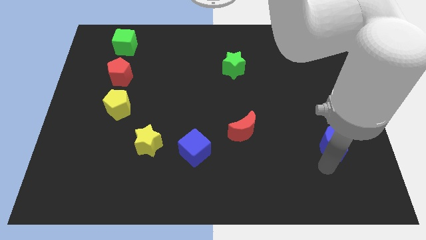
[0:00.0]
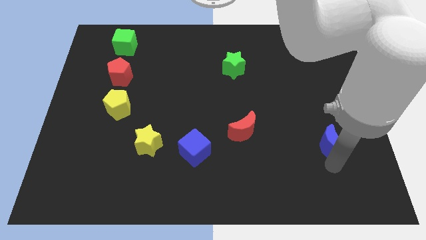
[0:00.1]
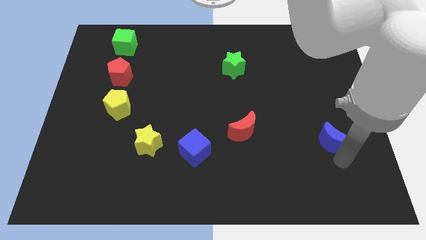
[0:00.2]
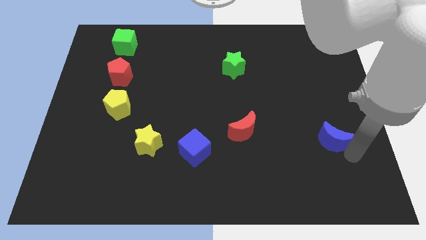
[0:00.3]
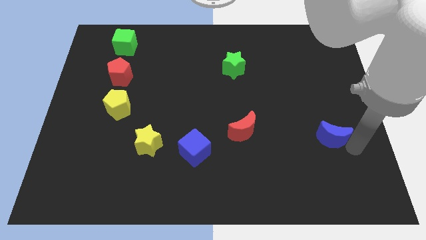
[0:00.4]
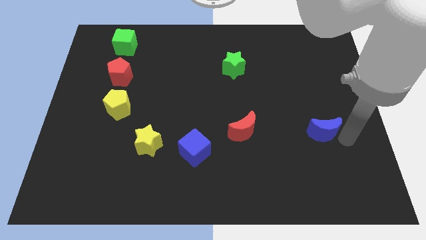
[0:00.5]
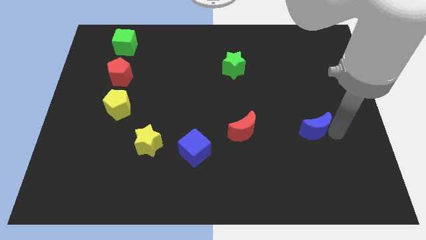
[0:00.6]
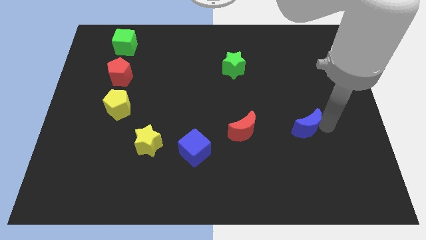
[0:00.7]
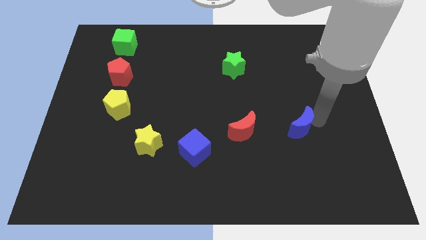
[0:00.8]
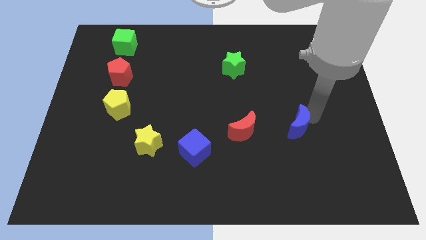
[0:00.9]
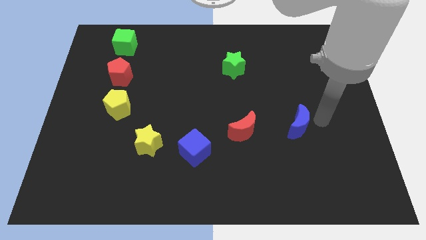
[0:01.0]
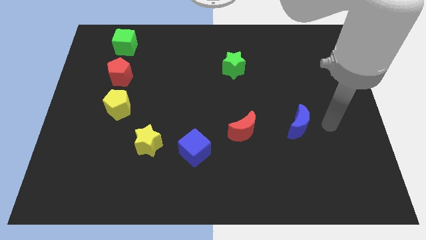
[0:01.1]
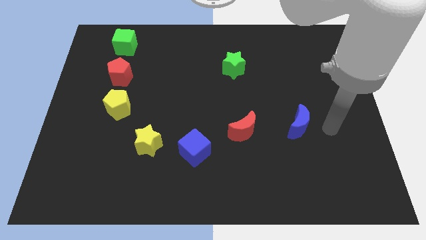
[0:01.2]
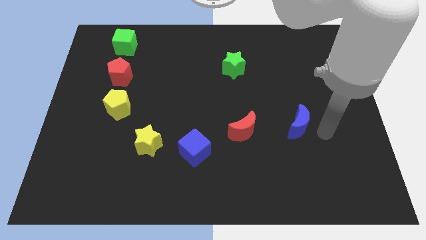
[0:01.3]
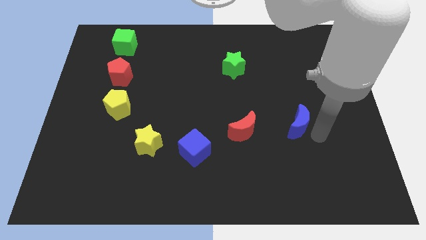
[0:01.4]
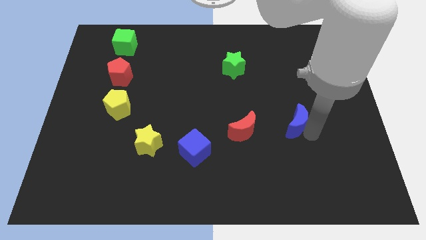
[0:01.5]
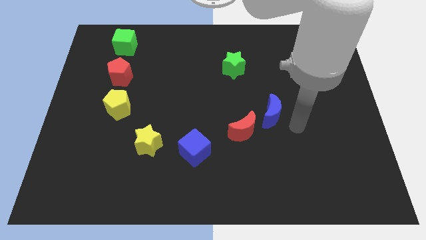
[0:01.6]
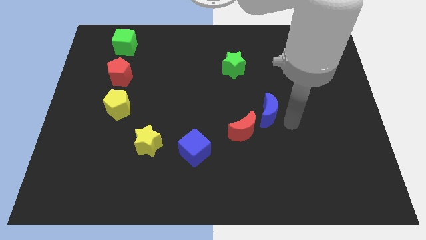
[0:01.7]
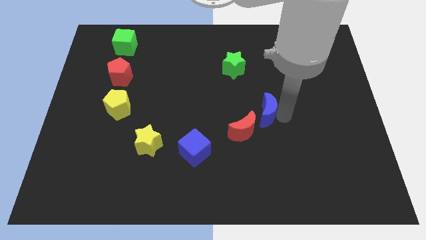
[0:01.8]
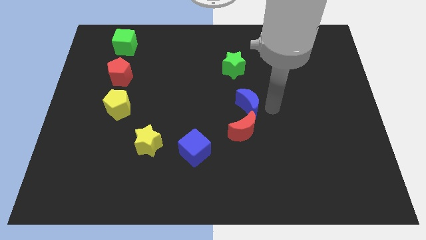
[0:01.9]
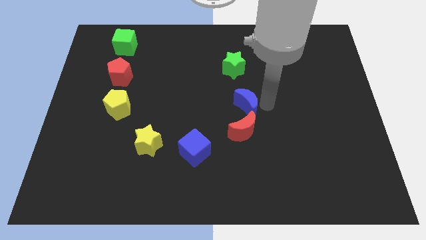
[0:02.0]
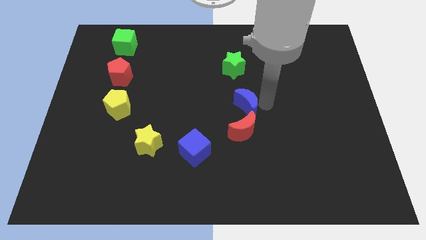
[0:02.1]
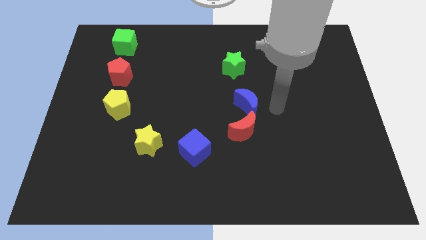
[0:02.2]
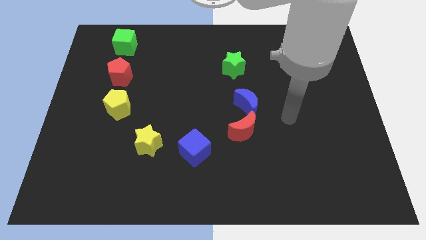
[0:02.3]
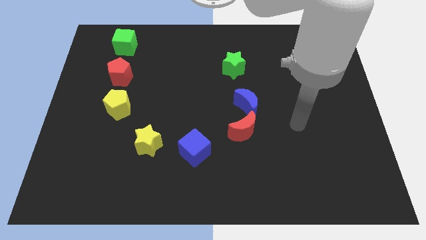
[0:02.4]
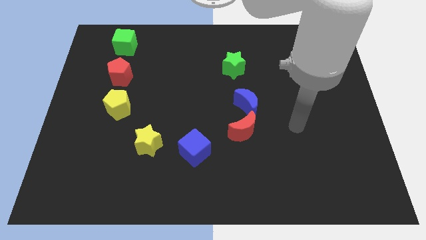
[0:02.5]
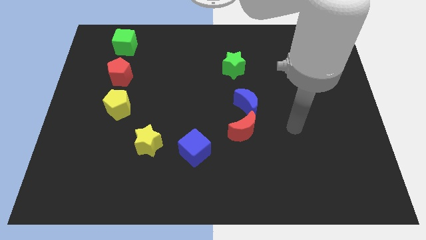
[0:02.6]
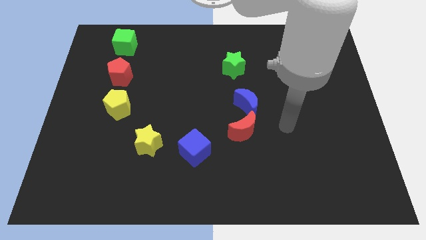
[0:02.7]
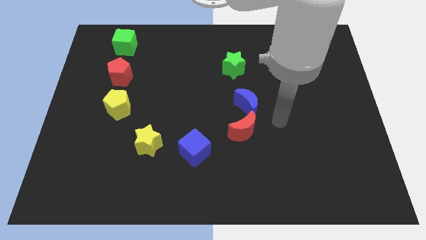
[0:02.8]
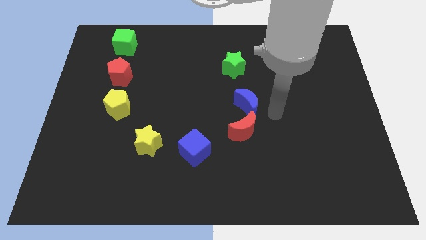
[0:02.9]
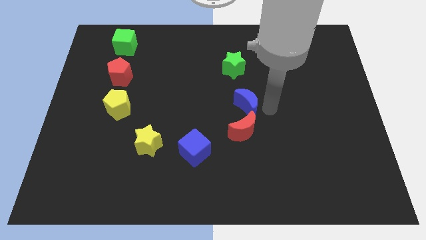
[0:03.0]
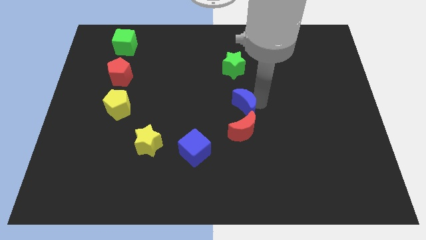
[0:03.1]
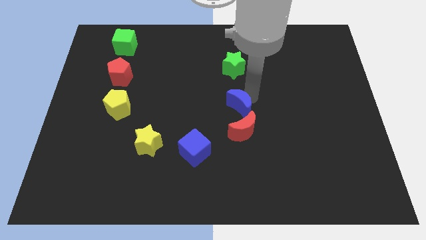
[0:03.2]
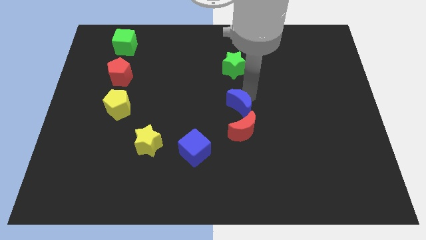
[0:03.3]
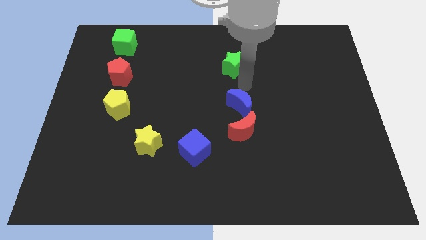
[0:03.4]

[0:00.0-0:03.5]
place blue moon to the top of red moon

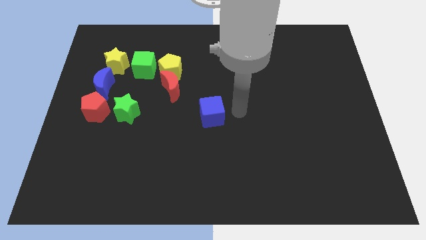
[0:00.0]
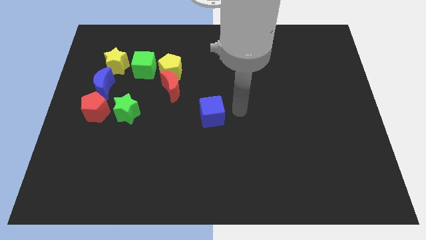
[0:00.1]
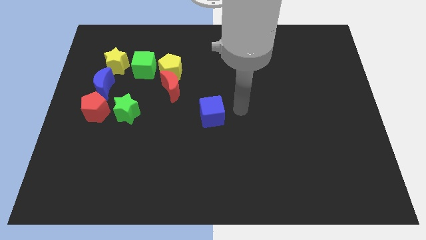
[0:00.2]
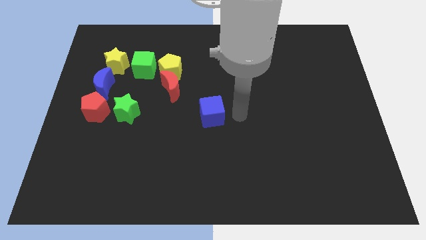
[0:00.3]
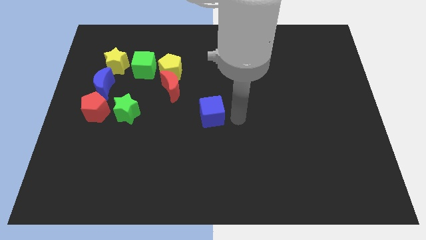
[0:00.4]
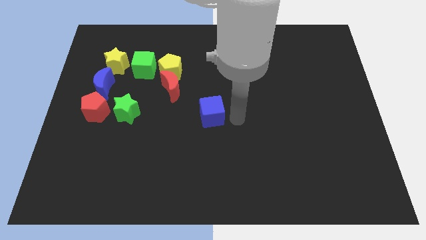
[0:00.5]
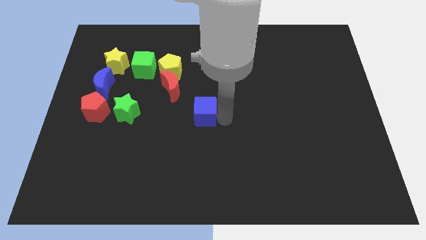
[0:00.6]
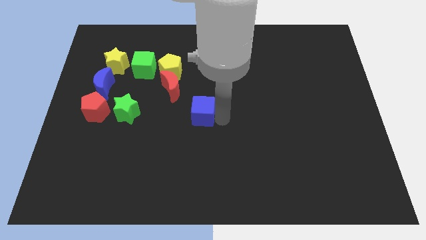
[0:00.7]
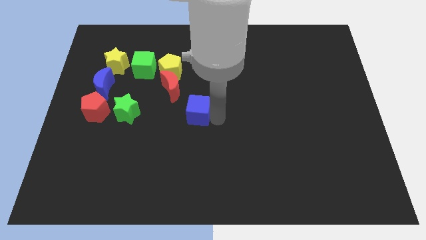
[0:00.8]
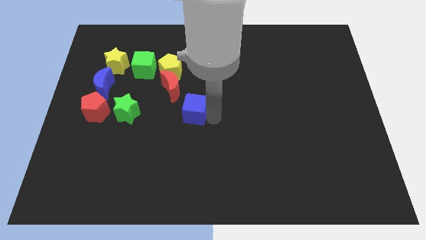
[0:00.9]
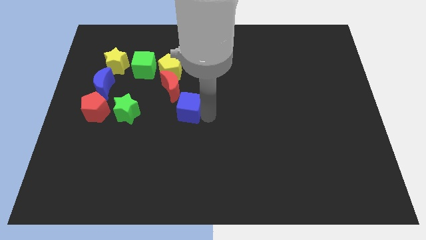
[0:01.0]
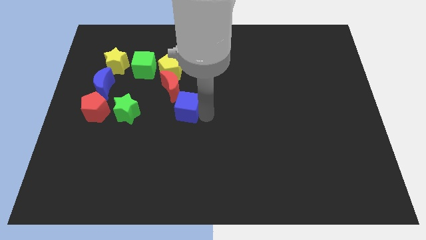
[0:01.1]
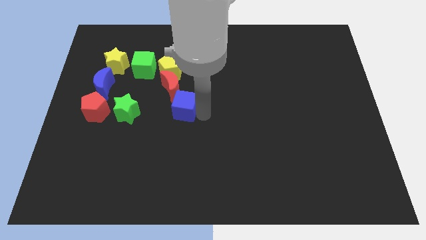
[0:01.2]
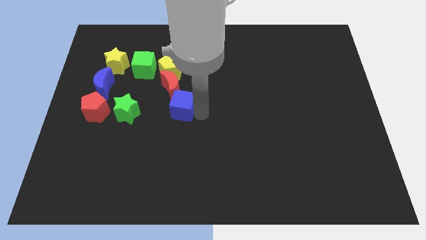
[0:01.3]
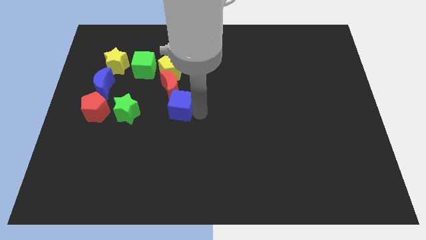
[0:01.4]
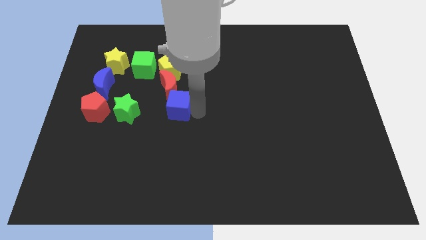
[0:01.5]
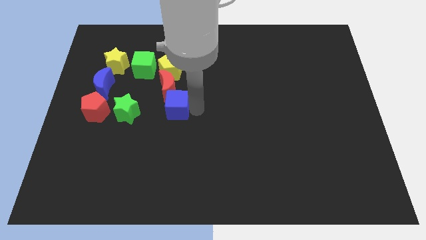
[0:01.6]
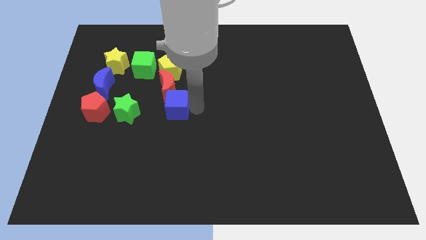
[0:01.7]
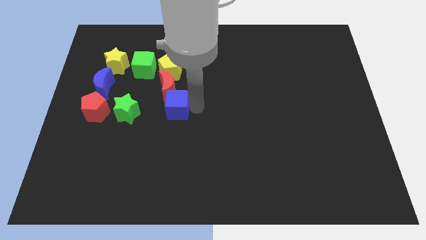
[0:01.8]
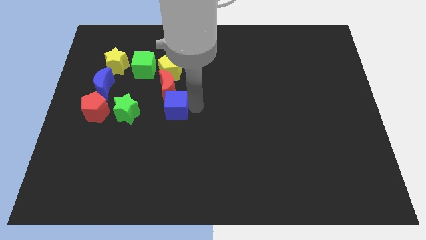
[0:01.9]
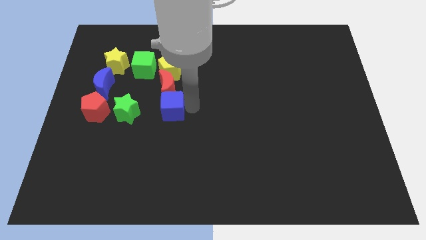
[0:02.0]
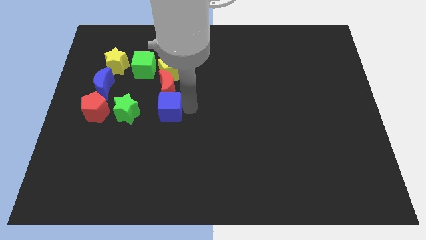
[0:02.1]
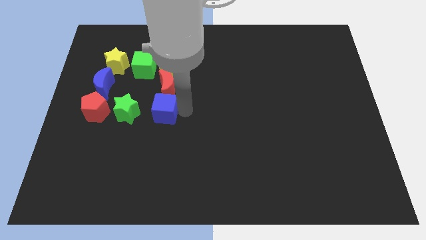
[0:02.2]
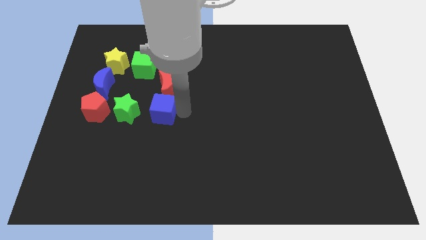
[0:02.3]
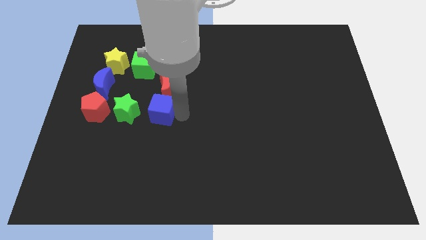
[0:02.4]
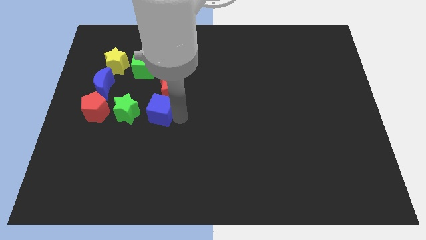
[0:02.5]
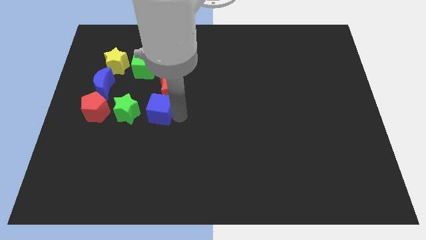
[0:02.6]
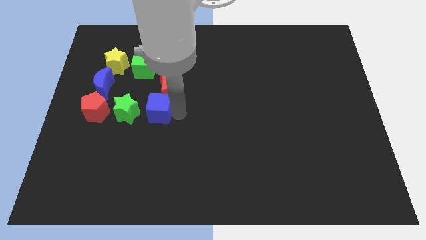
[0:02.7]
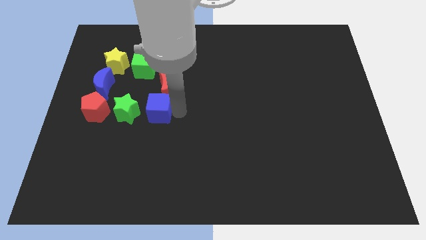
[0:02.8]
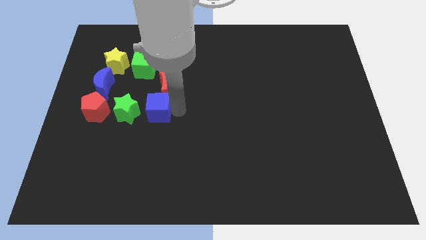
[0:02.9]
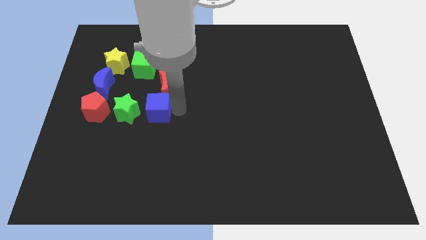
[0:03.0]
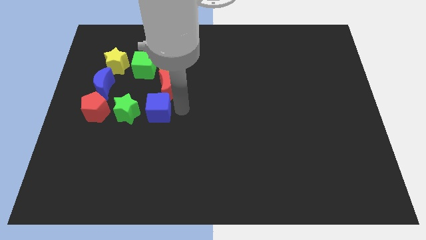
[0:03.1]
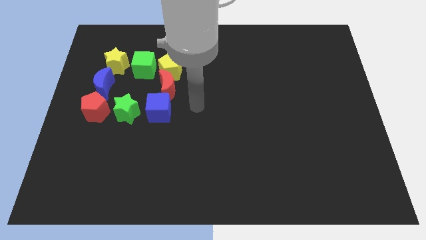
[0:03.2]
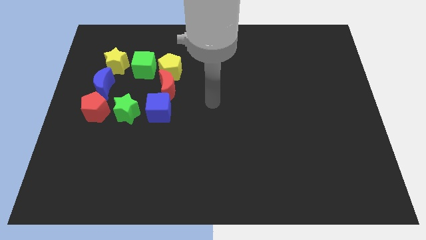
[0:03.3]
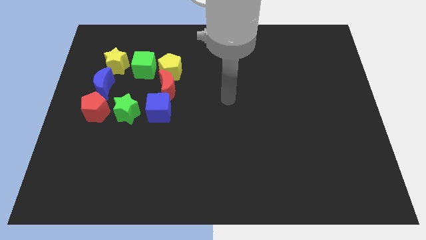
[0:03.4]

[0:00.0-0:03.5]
place blue cube close to the green star

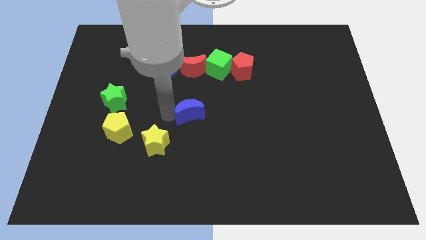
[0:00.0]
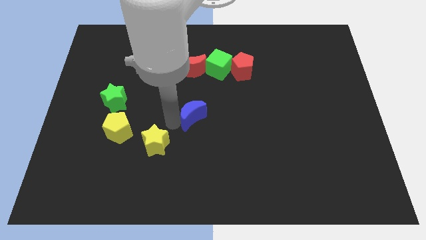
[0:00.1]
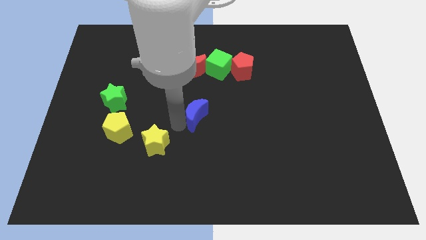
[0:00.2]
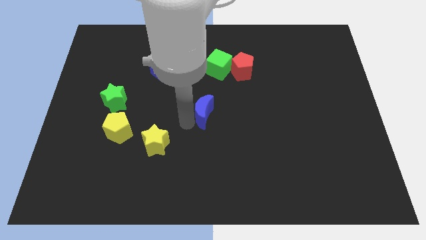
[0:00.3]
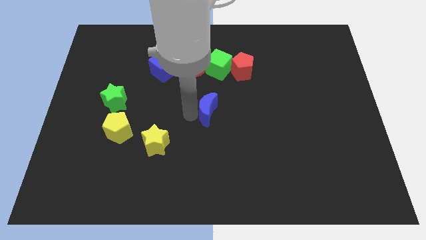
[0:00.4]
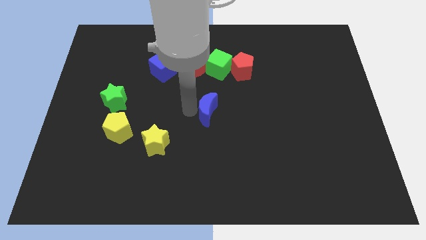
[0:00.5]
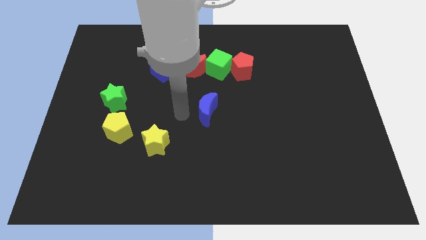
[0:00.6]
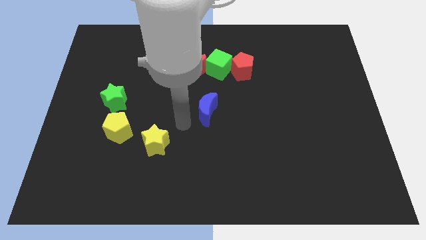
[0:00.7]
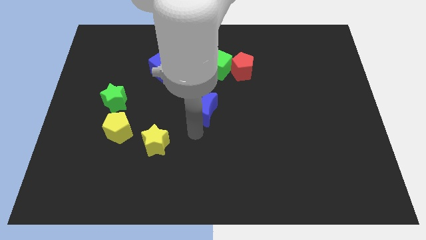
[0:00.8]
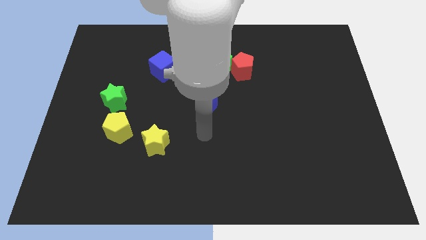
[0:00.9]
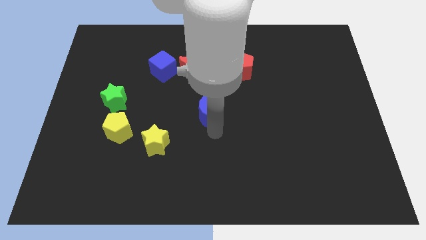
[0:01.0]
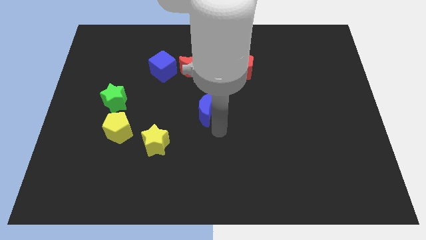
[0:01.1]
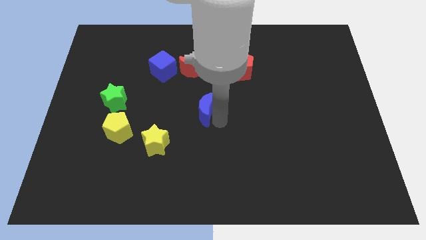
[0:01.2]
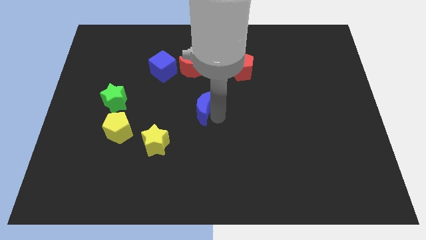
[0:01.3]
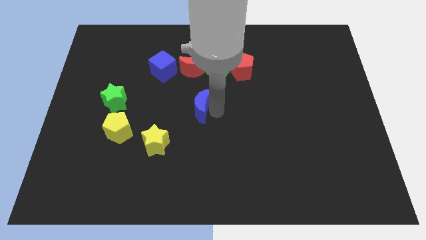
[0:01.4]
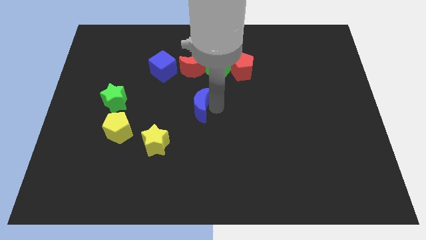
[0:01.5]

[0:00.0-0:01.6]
place blue moon to the bottom of red moon

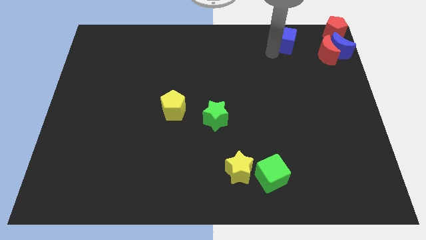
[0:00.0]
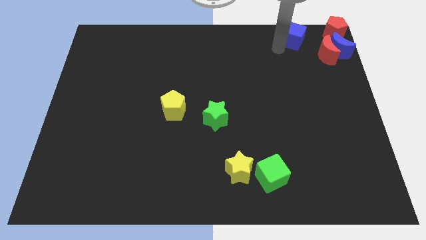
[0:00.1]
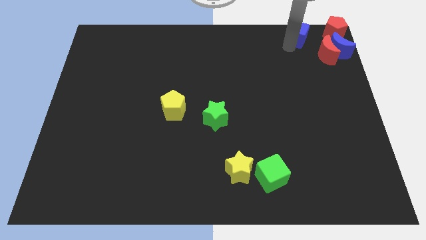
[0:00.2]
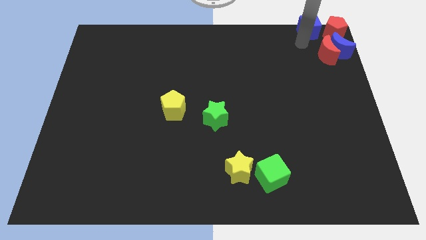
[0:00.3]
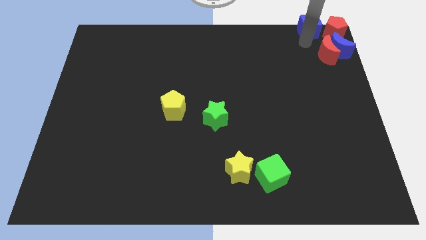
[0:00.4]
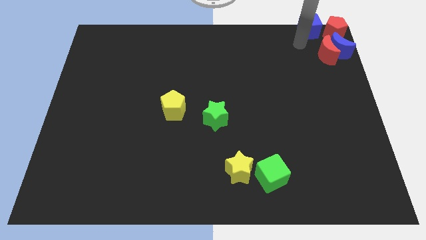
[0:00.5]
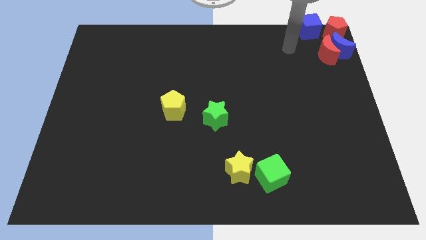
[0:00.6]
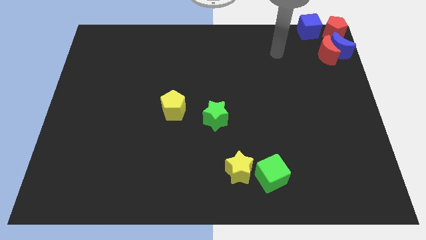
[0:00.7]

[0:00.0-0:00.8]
move the blue cube close to the red pentagon
